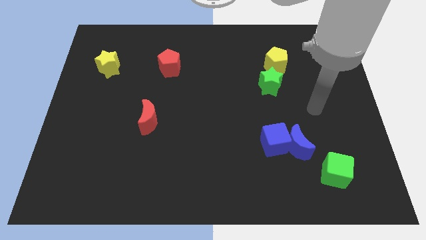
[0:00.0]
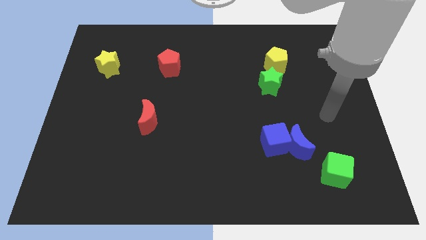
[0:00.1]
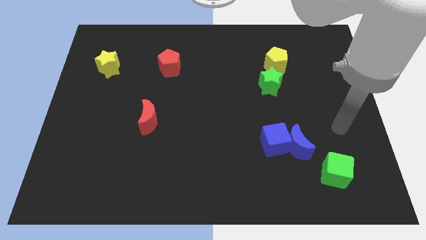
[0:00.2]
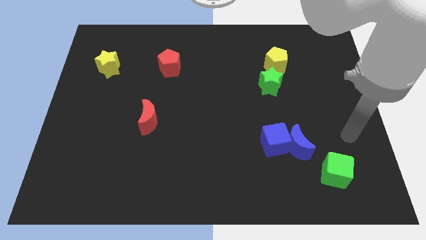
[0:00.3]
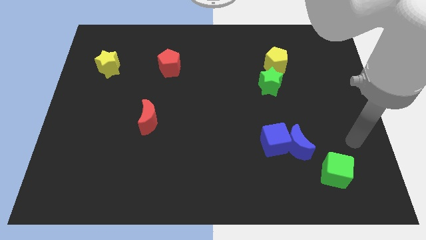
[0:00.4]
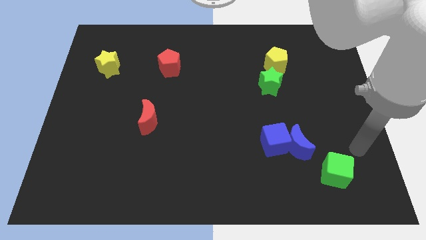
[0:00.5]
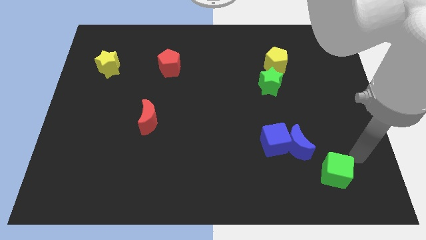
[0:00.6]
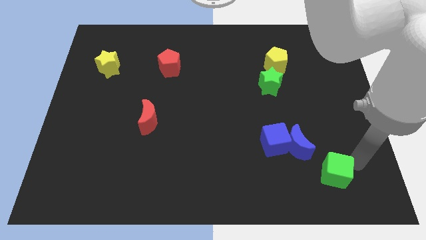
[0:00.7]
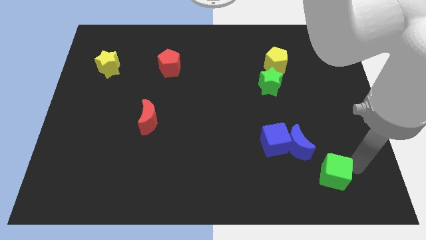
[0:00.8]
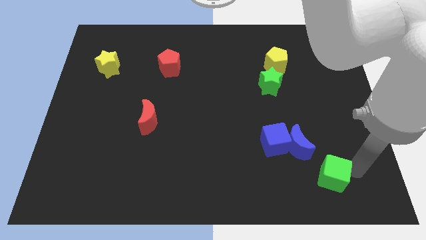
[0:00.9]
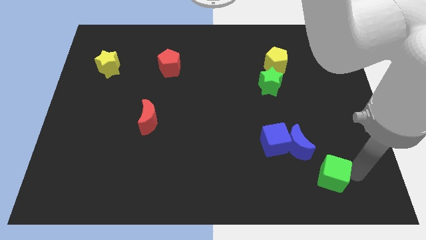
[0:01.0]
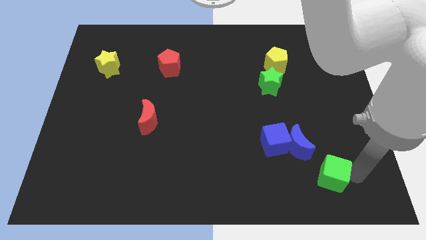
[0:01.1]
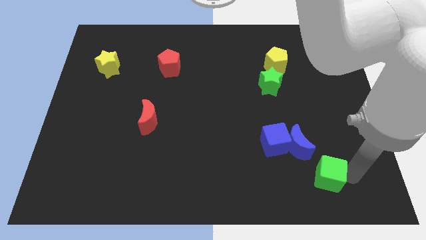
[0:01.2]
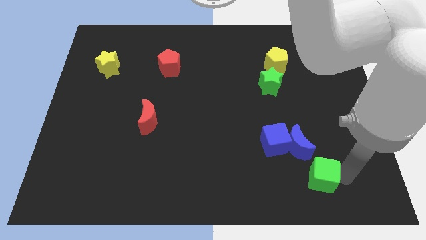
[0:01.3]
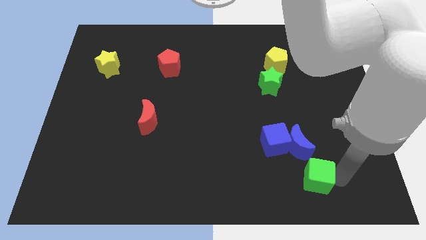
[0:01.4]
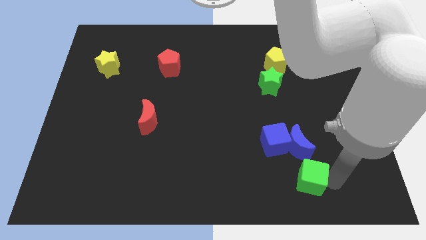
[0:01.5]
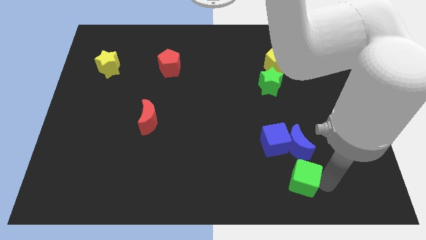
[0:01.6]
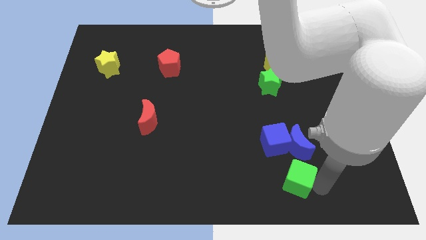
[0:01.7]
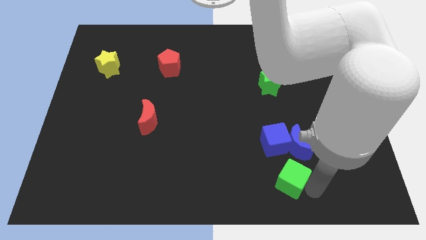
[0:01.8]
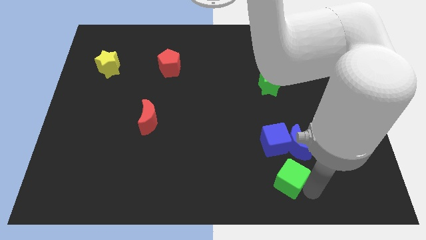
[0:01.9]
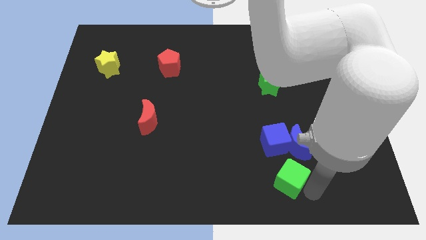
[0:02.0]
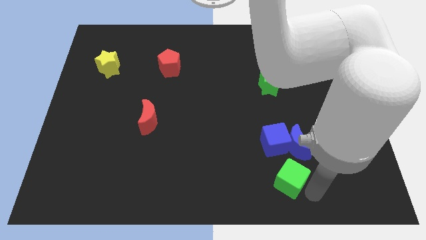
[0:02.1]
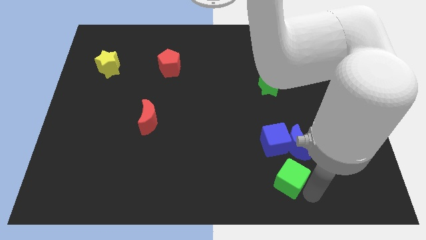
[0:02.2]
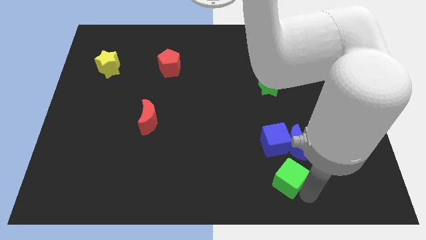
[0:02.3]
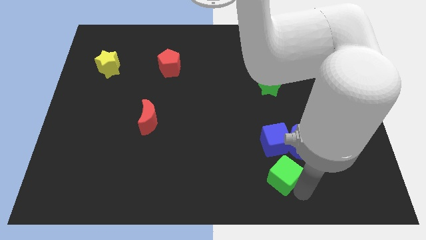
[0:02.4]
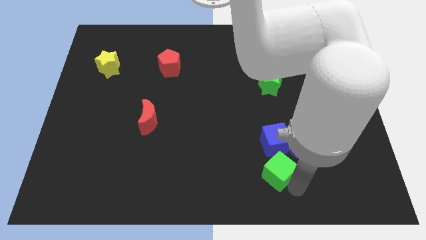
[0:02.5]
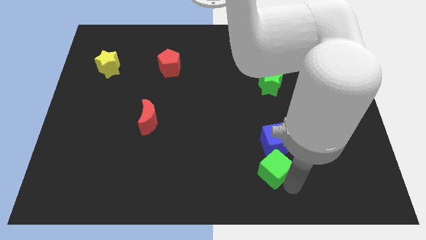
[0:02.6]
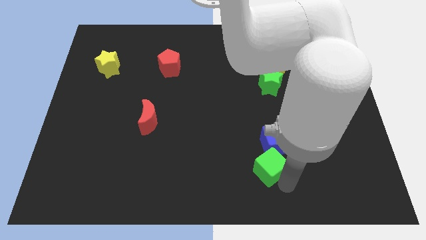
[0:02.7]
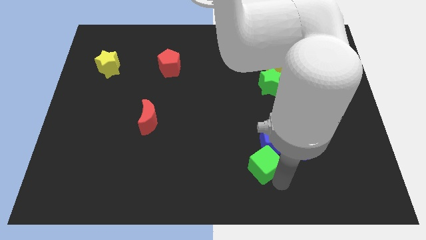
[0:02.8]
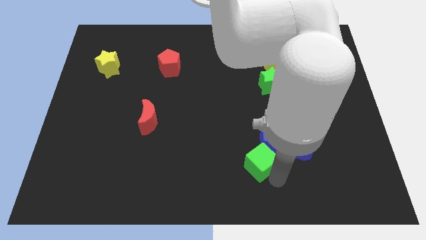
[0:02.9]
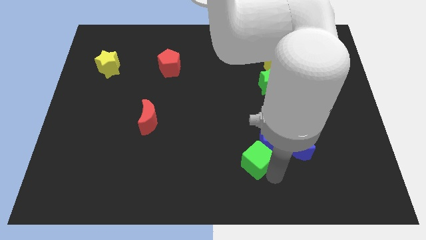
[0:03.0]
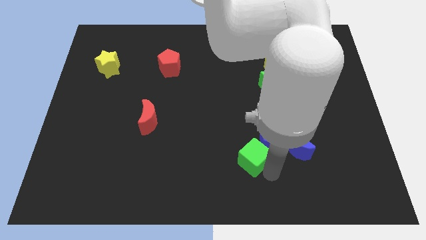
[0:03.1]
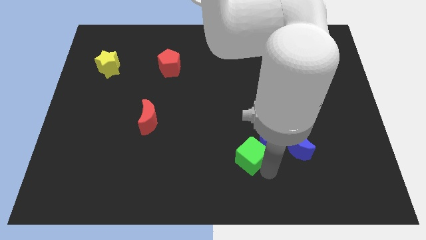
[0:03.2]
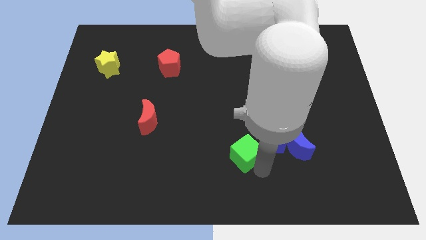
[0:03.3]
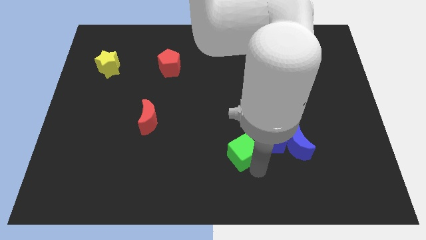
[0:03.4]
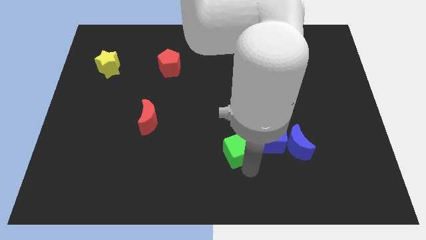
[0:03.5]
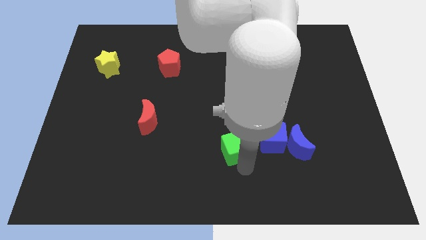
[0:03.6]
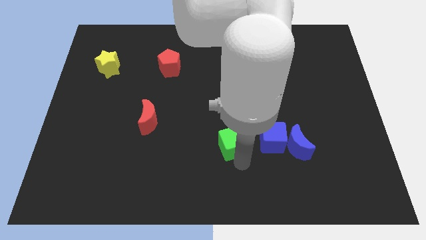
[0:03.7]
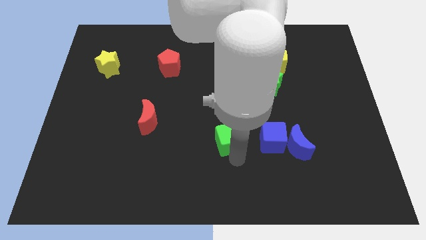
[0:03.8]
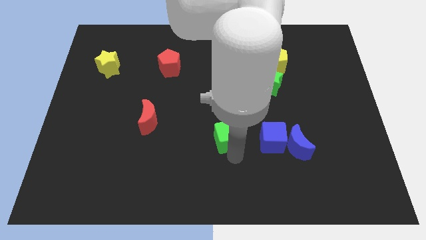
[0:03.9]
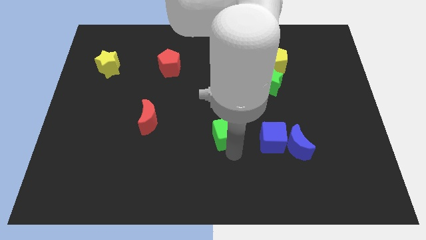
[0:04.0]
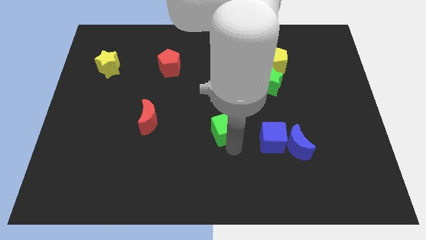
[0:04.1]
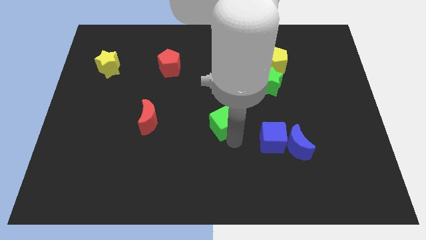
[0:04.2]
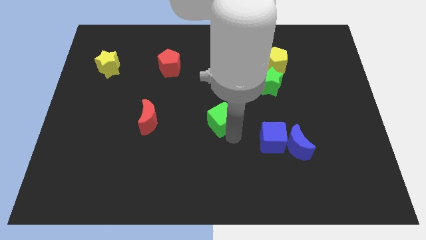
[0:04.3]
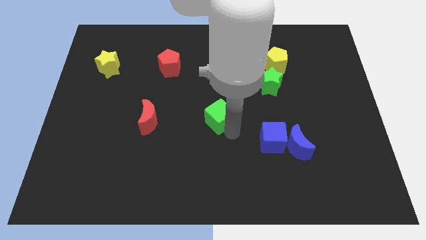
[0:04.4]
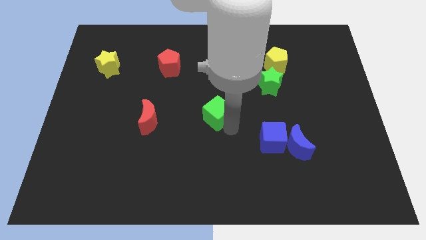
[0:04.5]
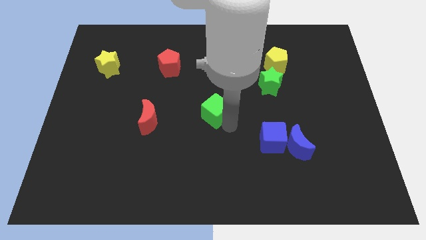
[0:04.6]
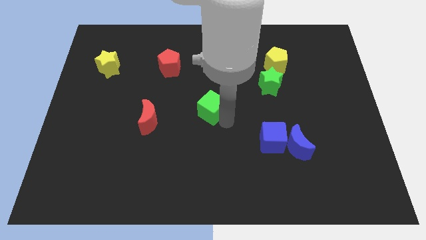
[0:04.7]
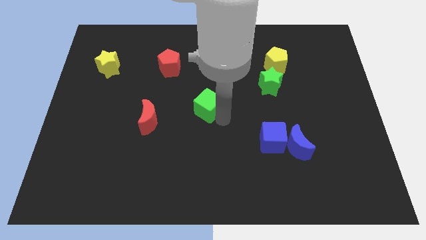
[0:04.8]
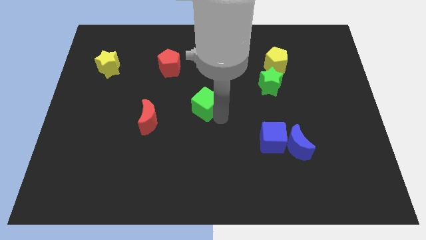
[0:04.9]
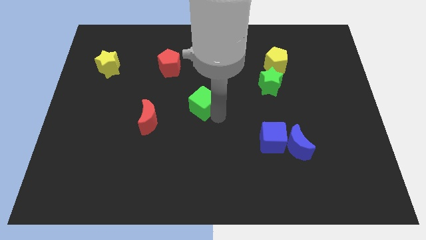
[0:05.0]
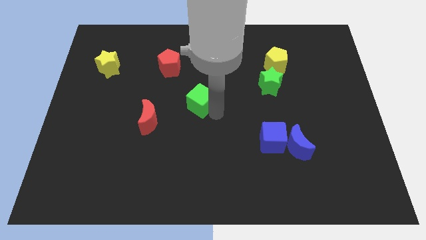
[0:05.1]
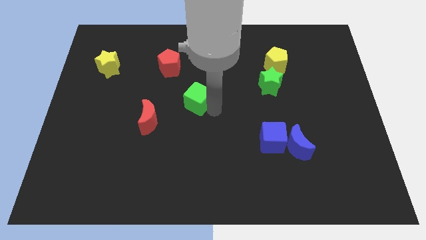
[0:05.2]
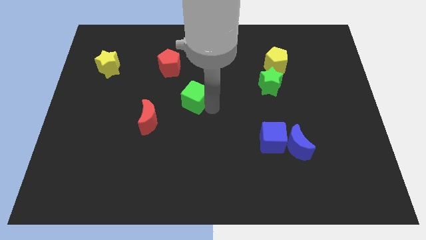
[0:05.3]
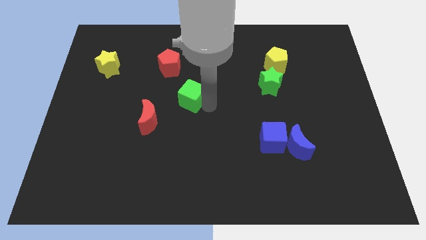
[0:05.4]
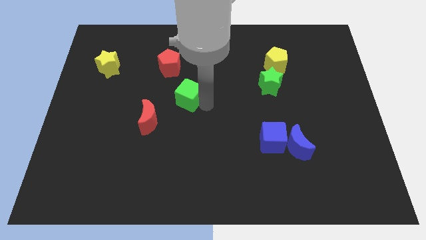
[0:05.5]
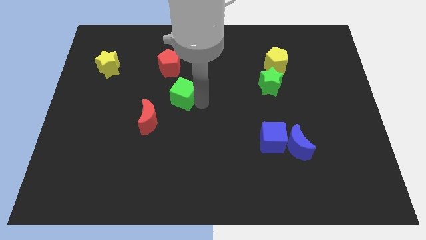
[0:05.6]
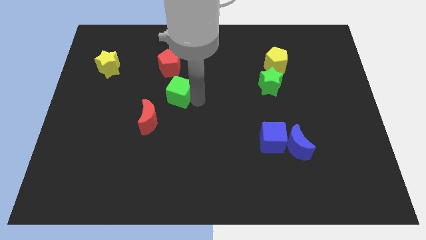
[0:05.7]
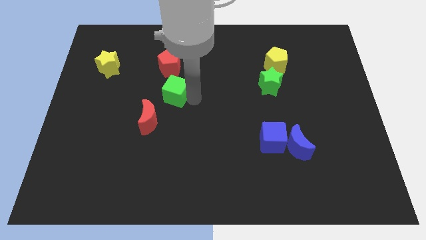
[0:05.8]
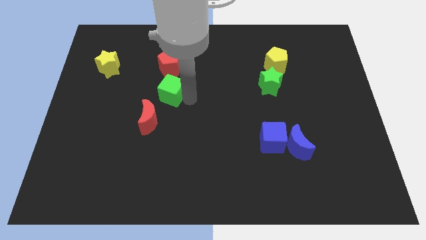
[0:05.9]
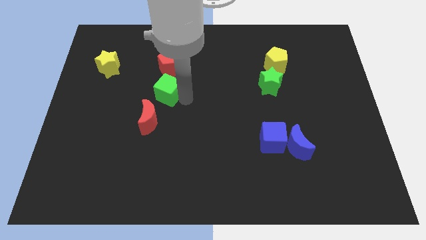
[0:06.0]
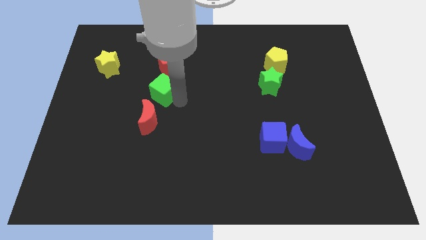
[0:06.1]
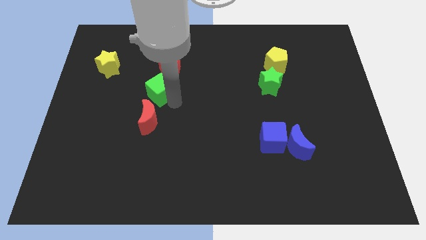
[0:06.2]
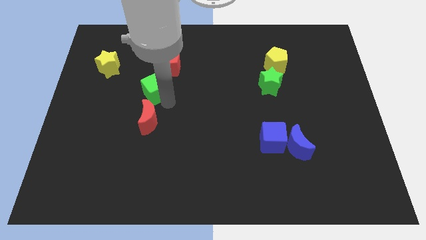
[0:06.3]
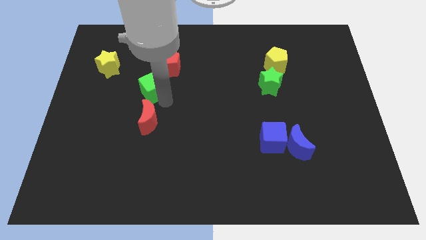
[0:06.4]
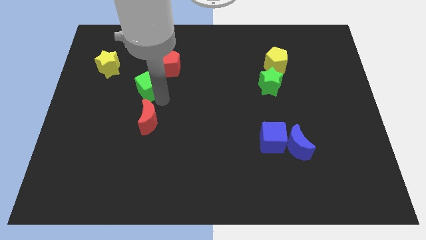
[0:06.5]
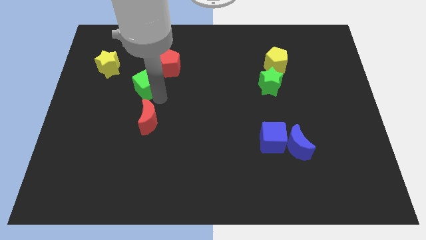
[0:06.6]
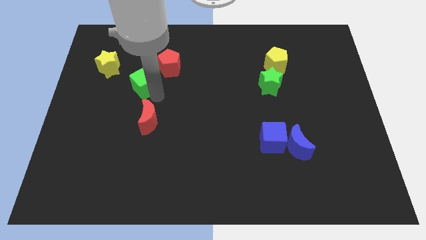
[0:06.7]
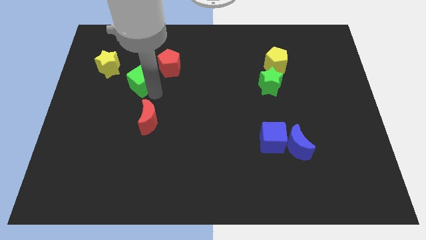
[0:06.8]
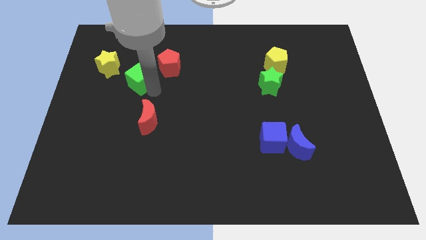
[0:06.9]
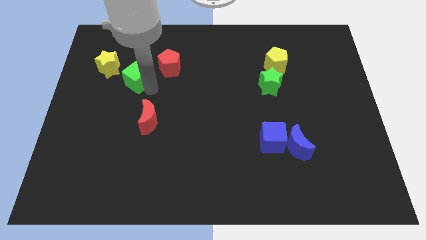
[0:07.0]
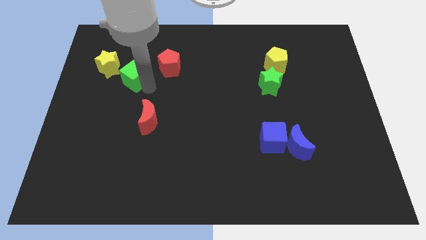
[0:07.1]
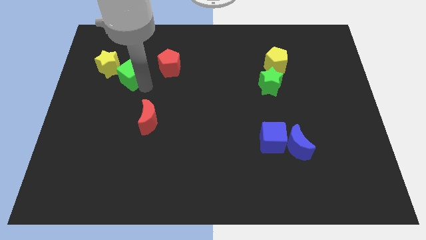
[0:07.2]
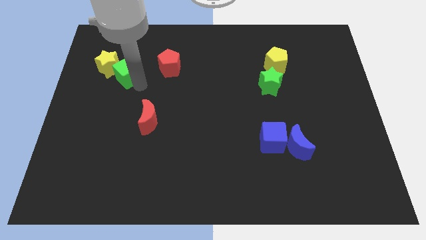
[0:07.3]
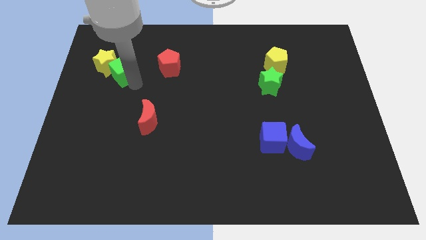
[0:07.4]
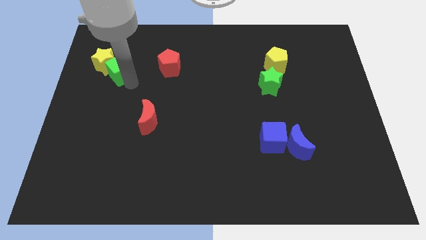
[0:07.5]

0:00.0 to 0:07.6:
push the green cube towards the yellow star

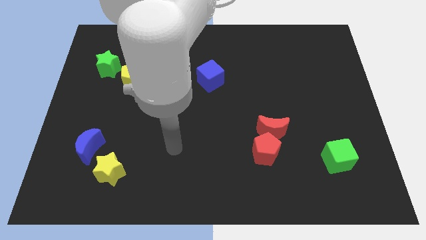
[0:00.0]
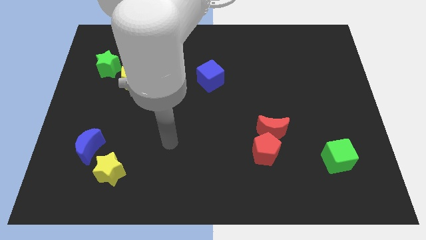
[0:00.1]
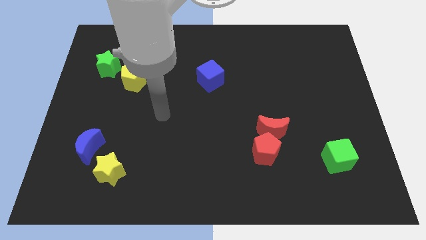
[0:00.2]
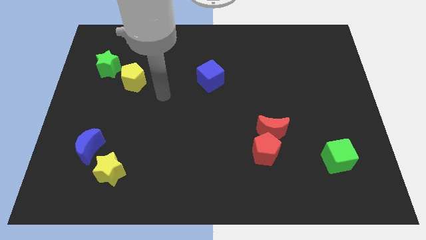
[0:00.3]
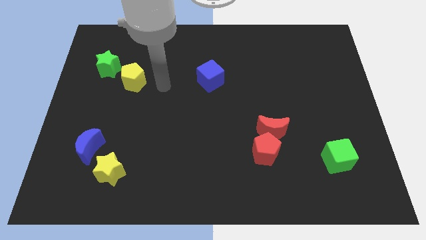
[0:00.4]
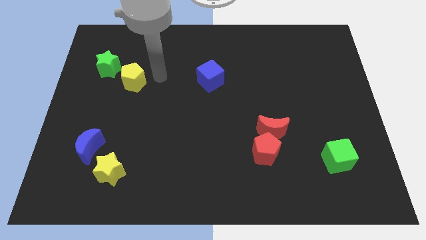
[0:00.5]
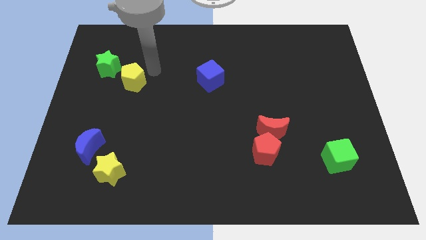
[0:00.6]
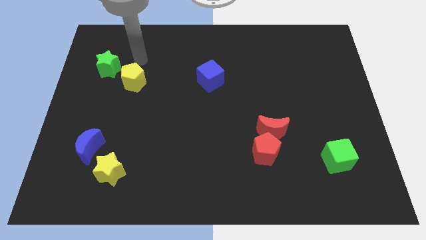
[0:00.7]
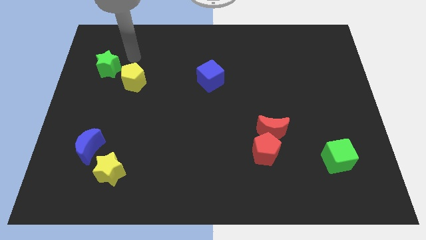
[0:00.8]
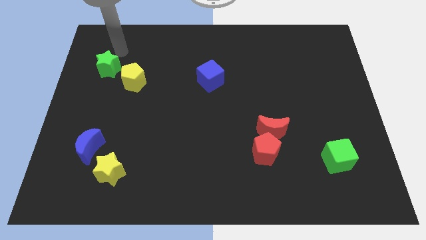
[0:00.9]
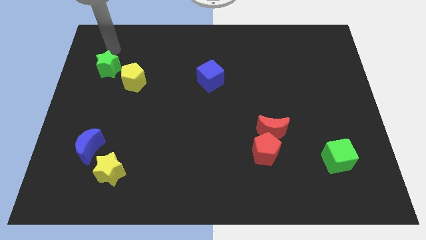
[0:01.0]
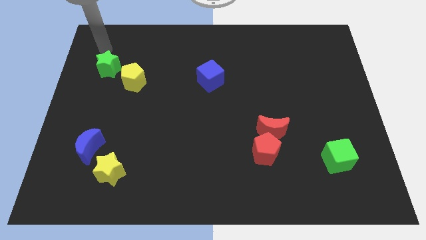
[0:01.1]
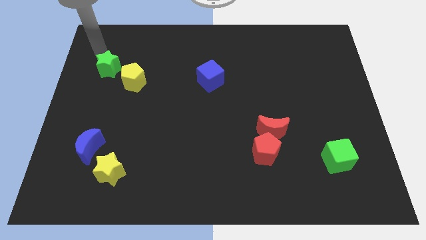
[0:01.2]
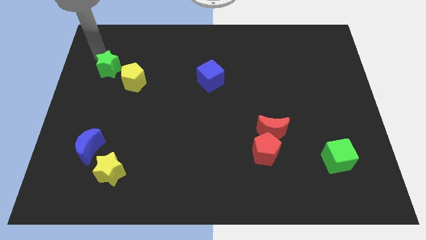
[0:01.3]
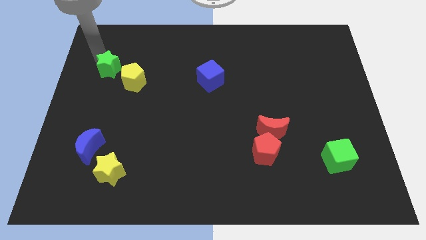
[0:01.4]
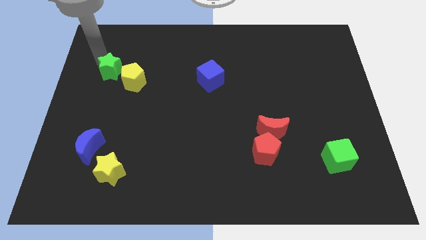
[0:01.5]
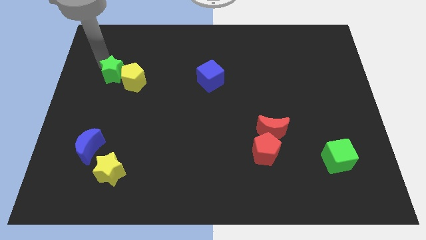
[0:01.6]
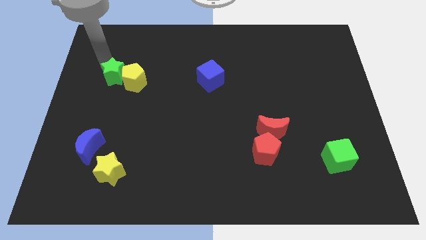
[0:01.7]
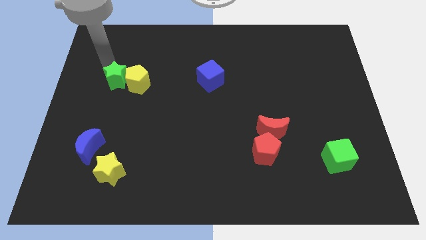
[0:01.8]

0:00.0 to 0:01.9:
slide the green star to the yellow pentagon
